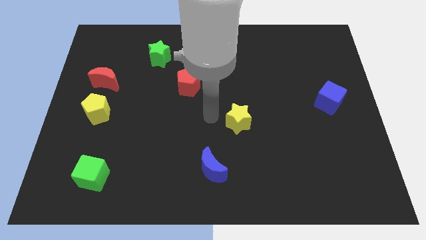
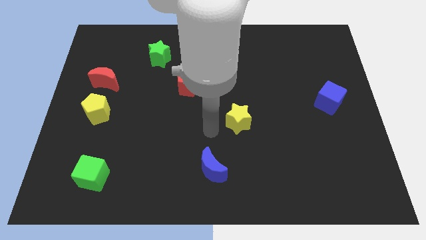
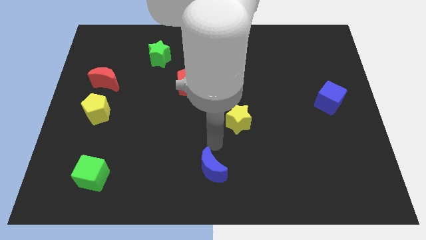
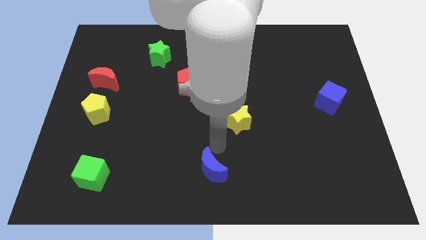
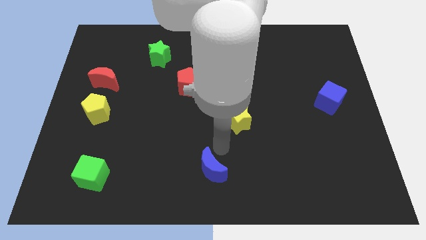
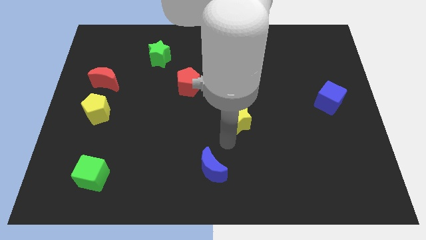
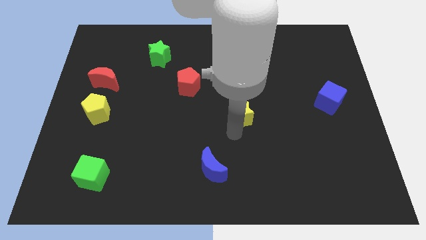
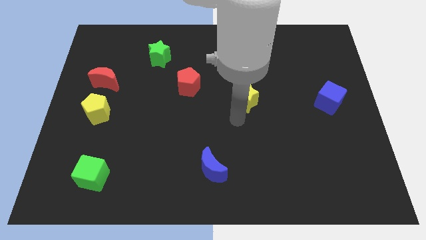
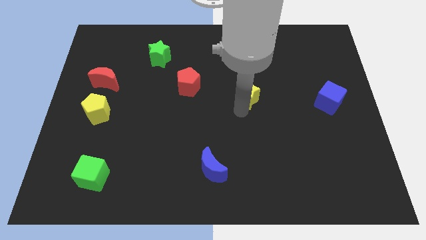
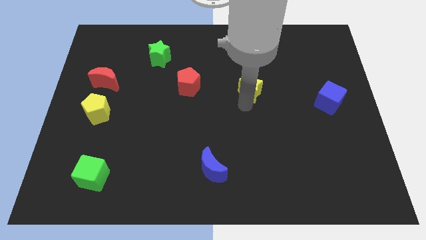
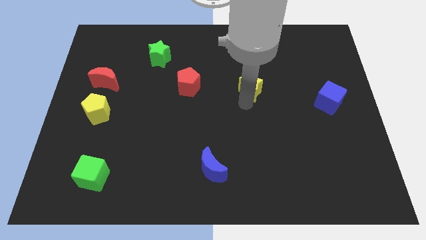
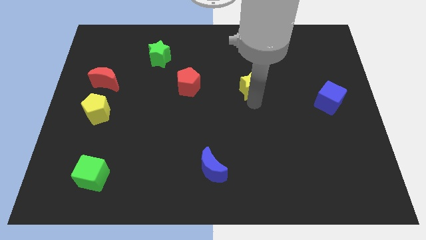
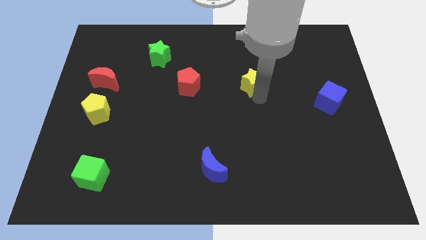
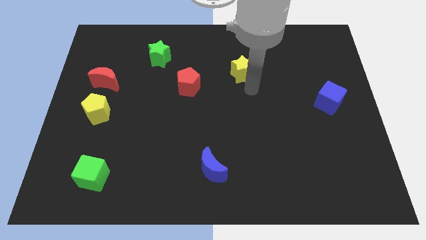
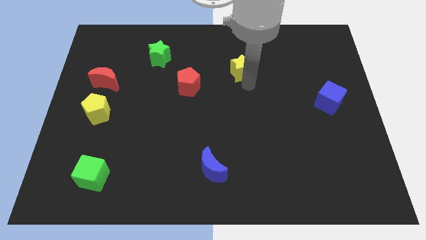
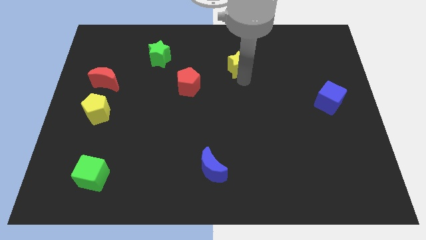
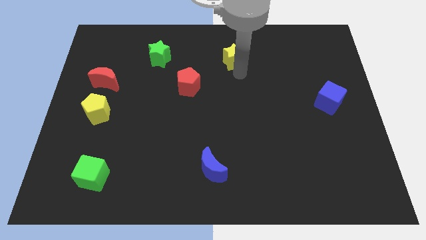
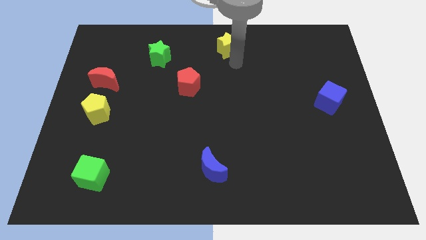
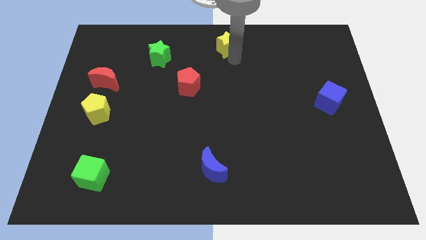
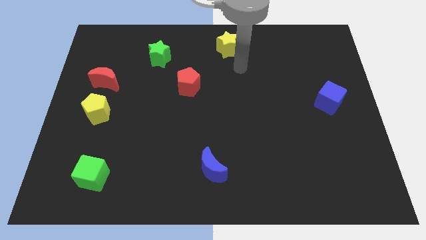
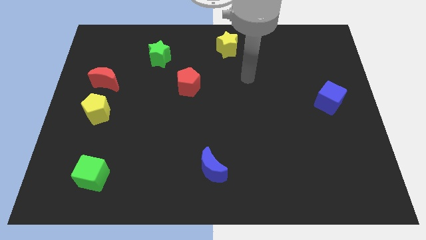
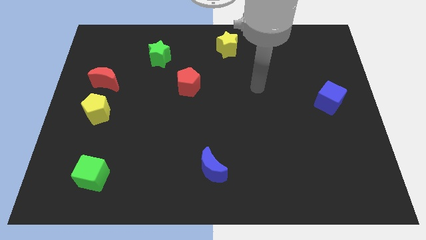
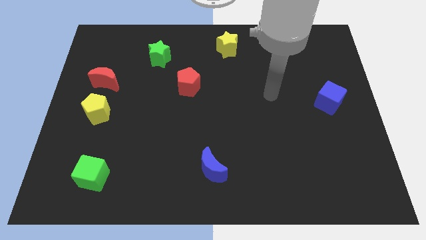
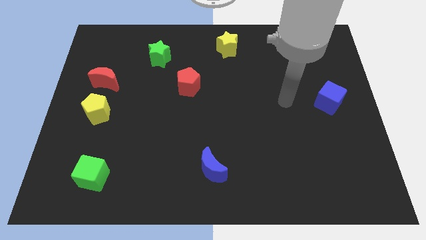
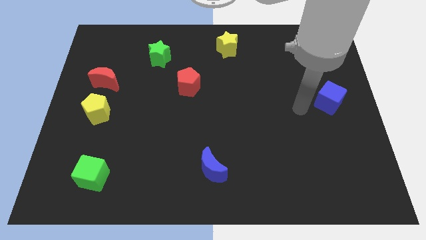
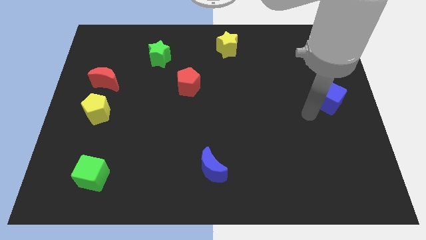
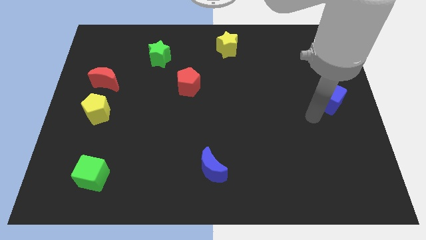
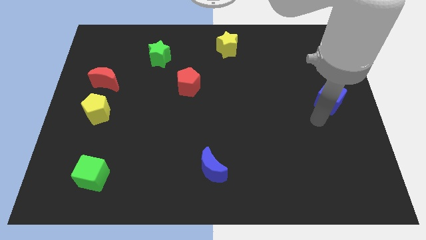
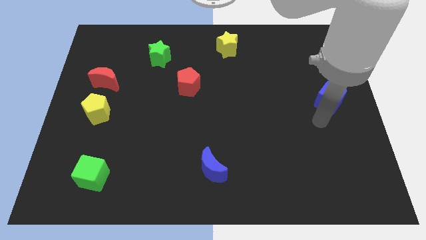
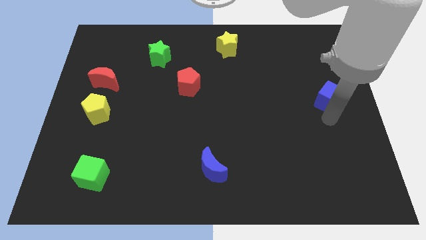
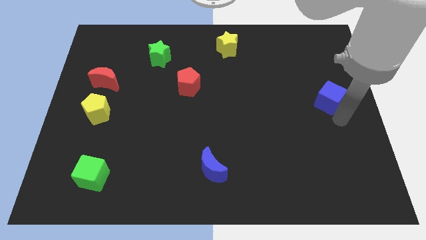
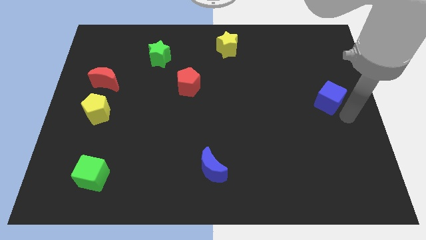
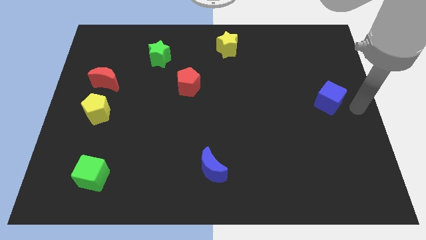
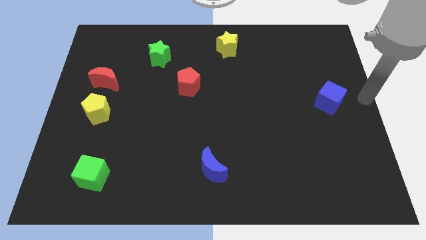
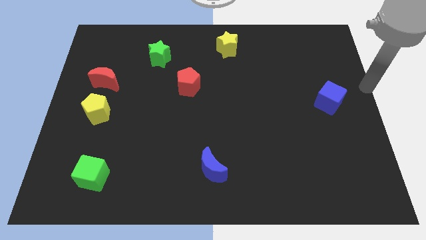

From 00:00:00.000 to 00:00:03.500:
place the yellow pentagon diagonal to the red pentagon

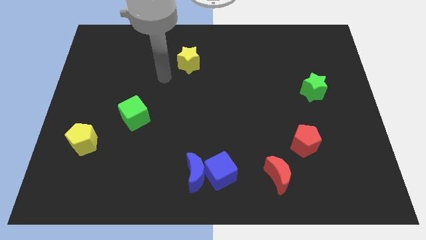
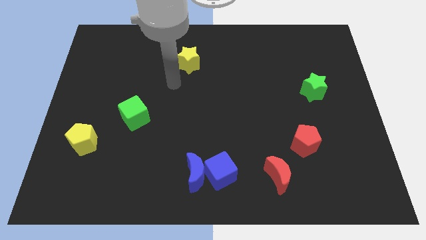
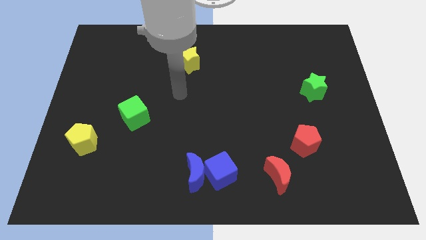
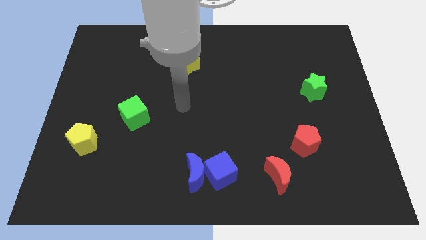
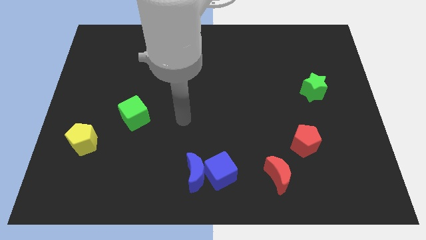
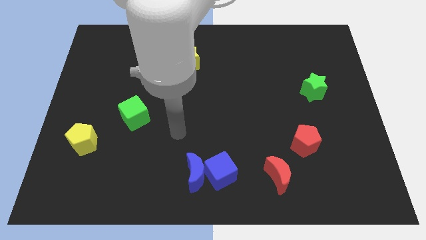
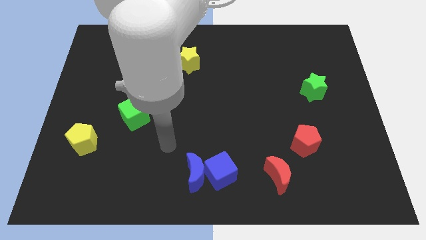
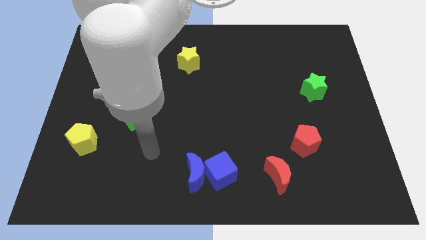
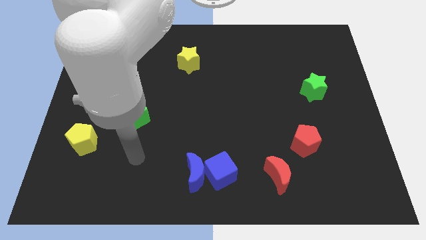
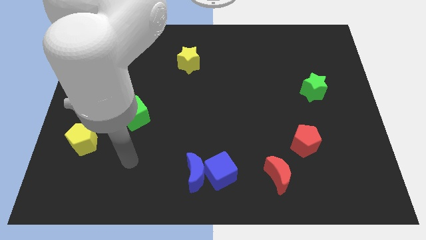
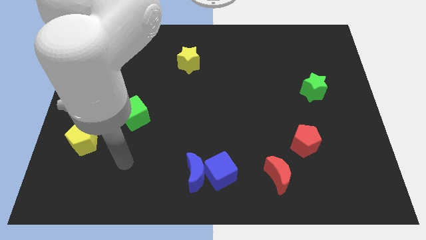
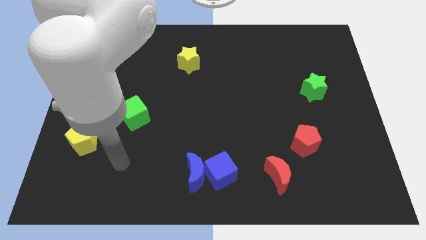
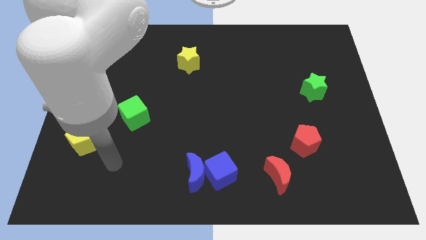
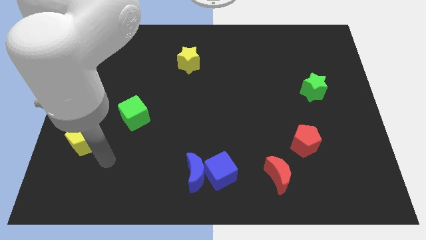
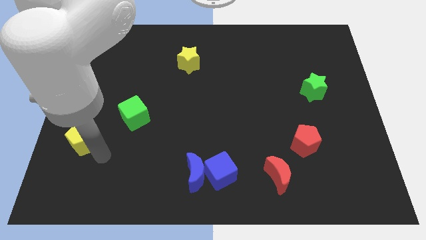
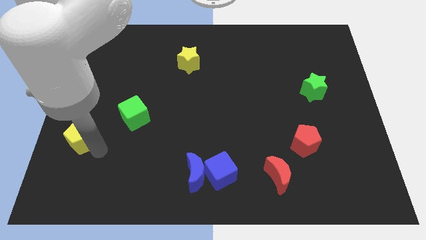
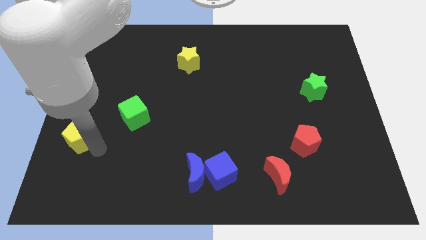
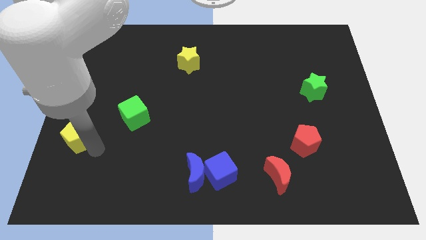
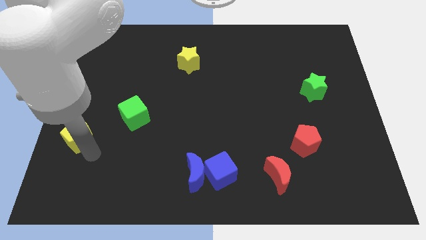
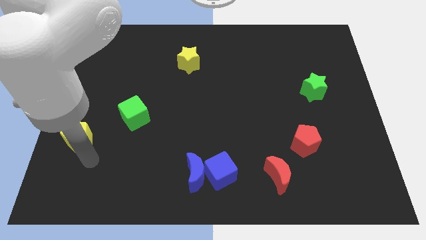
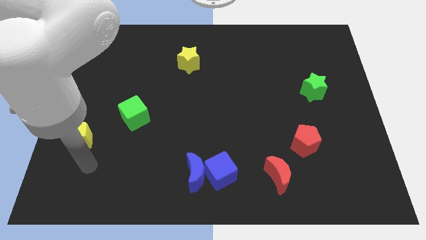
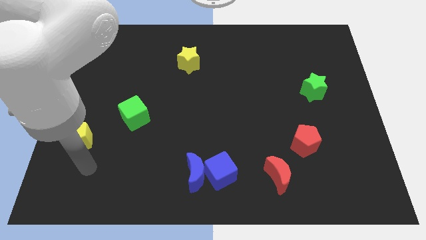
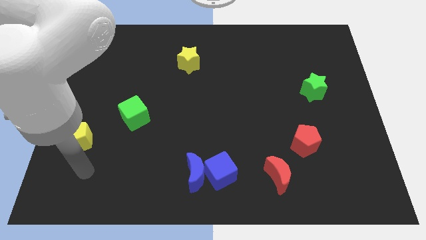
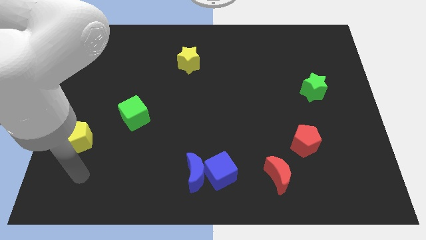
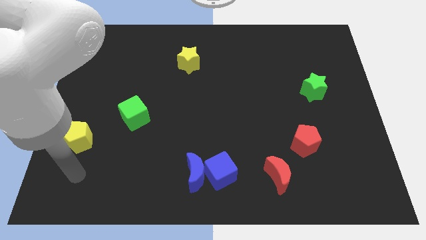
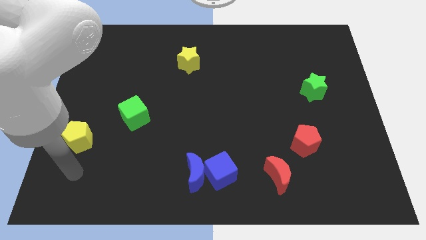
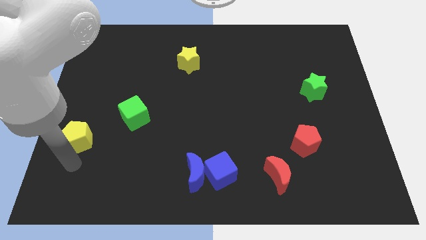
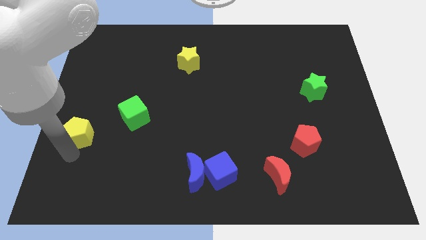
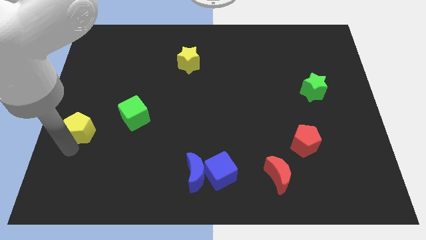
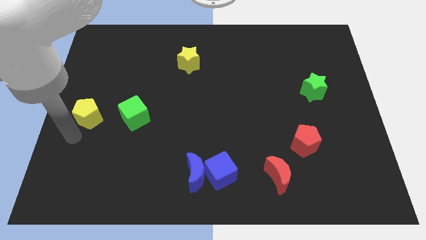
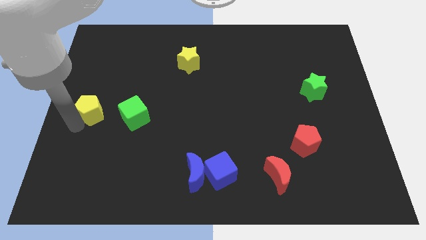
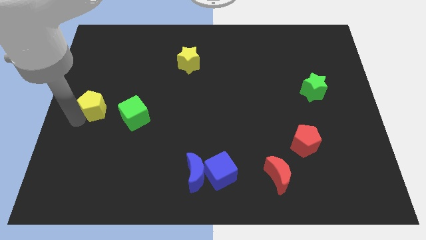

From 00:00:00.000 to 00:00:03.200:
move the yellow pentagon to the left of green cube

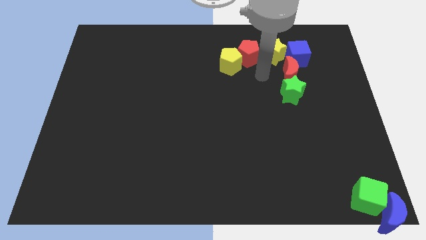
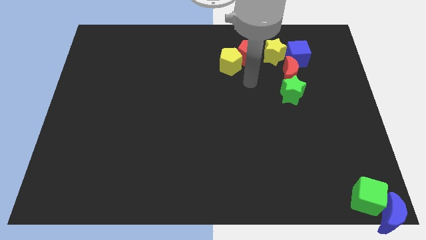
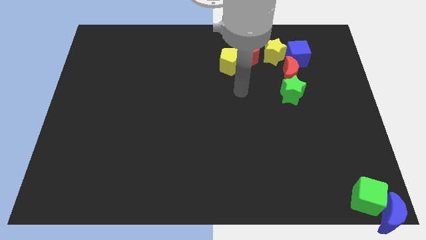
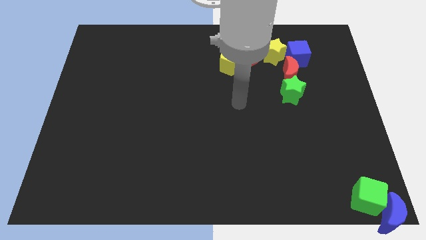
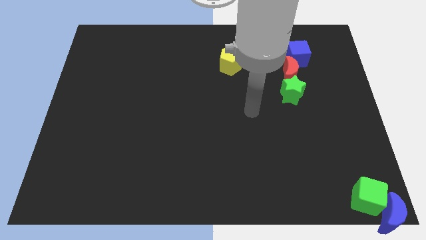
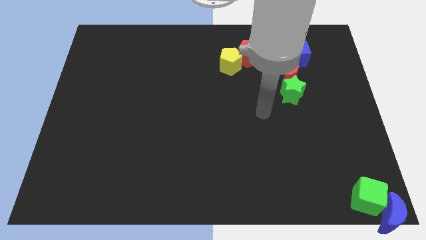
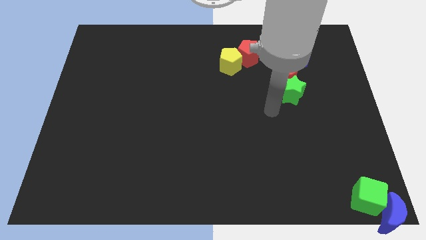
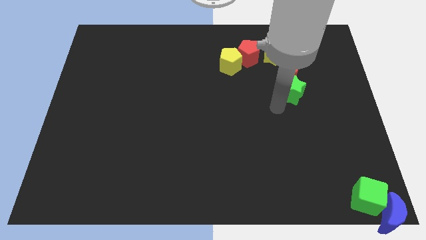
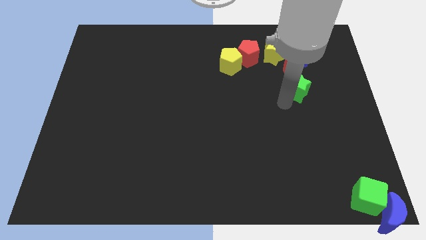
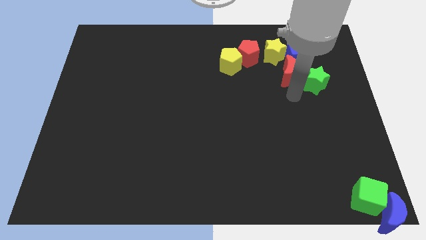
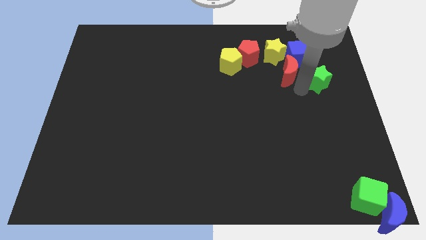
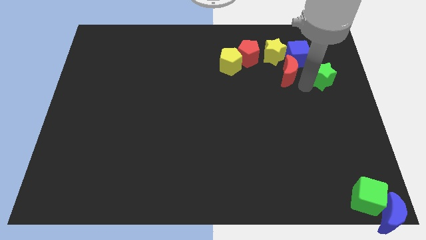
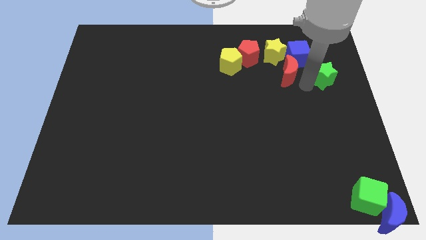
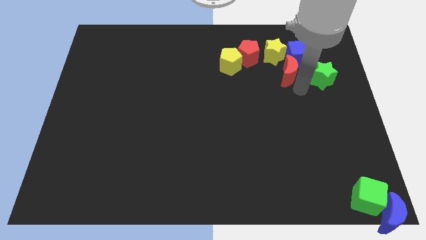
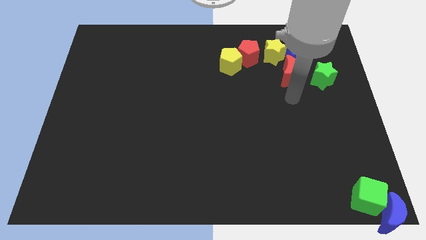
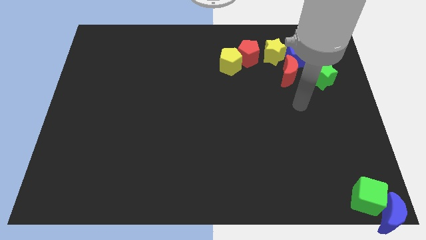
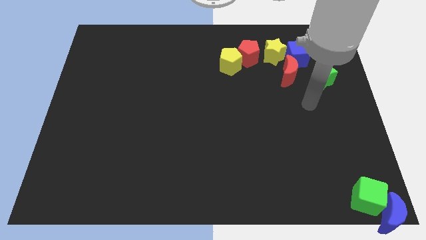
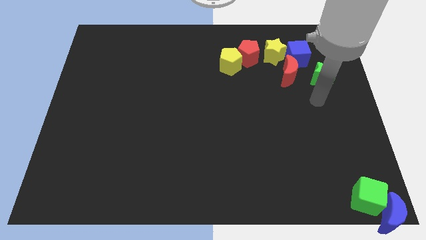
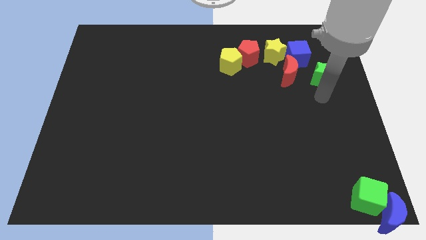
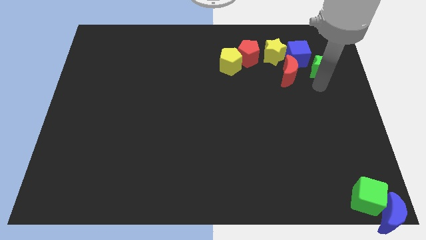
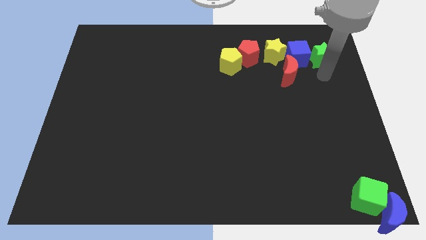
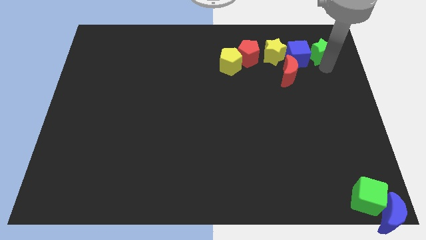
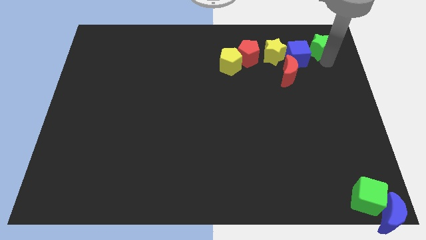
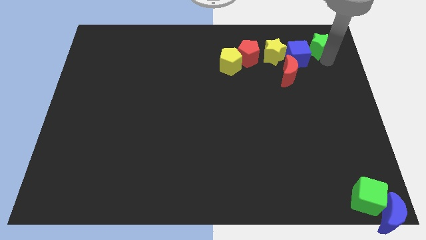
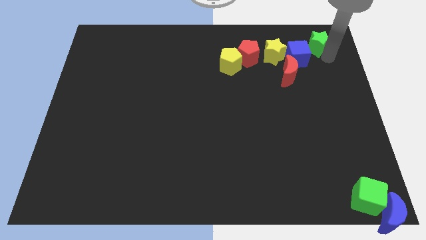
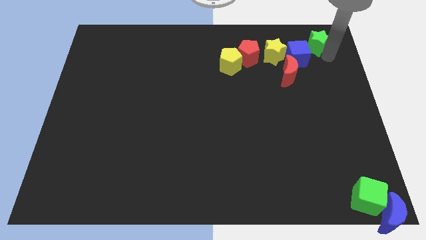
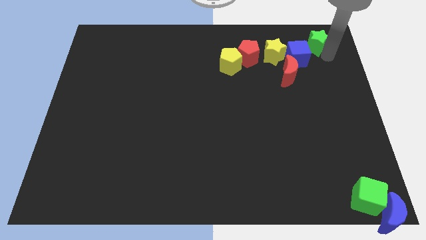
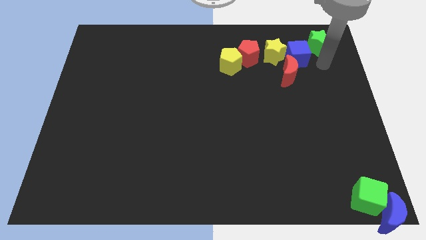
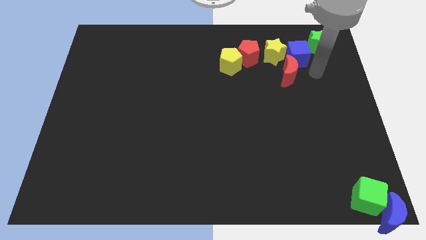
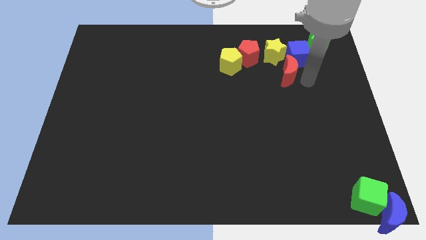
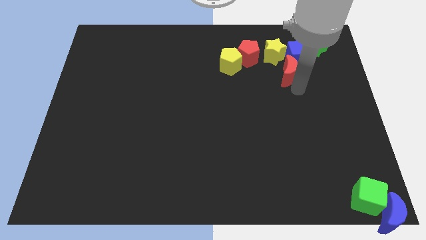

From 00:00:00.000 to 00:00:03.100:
place the green star on the top right
